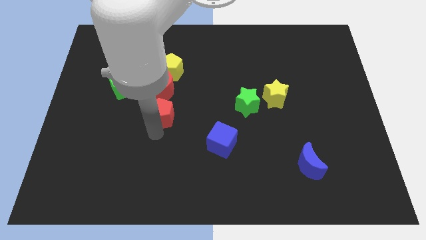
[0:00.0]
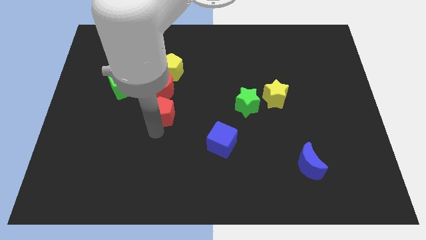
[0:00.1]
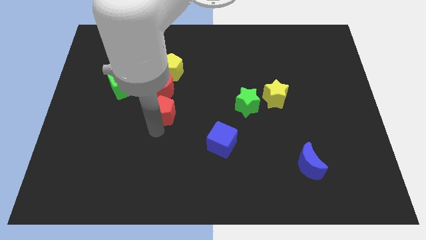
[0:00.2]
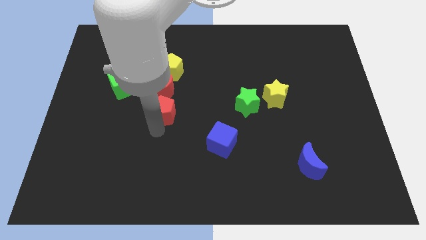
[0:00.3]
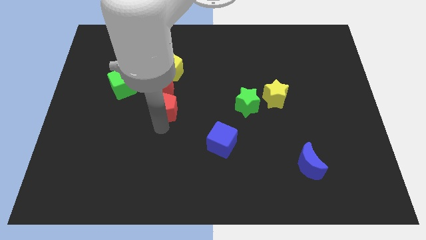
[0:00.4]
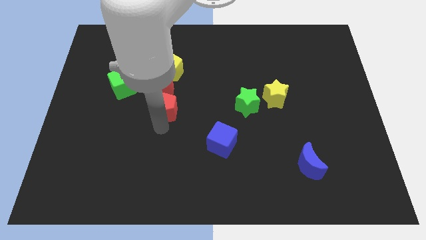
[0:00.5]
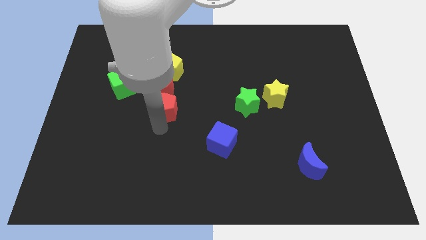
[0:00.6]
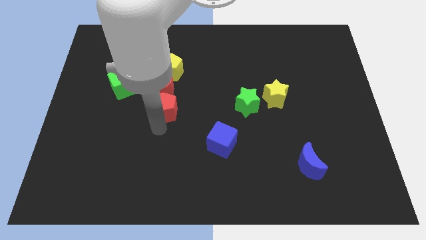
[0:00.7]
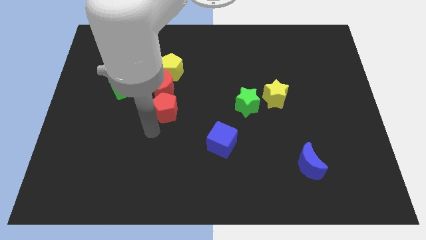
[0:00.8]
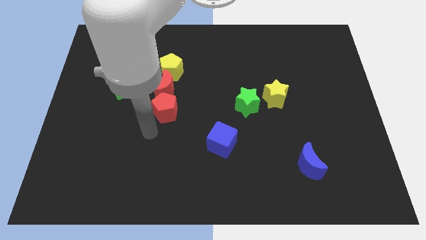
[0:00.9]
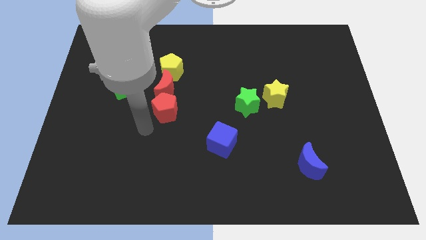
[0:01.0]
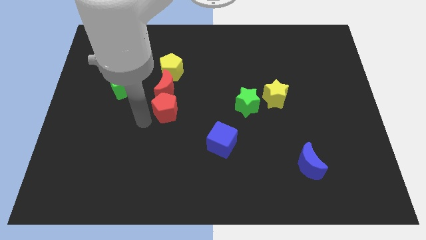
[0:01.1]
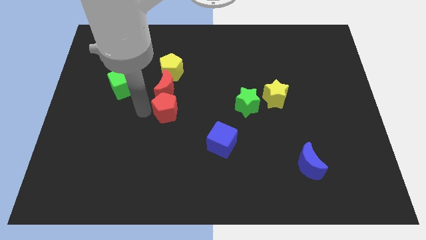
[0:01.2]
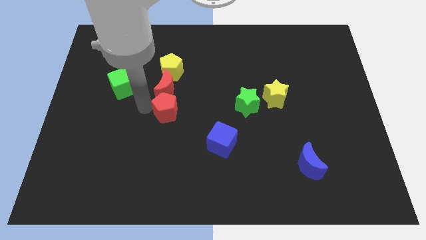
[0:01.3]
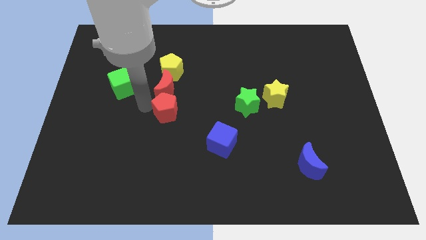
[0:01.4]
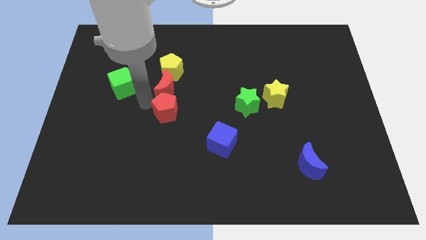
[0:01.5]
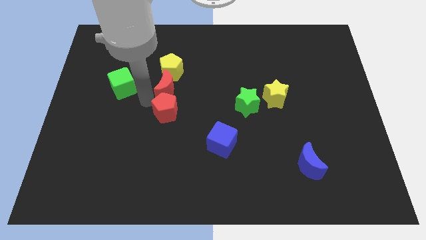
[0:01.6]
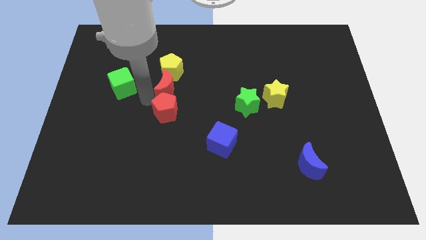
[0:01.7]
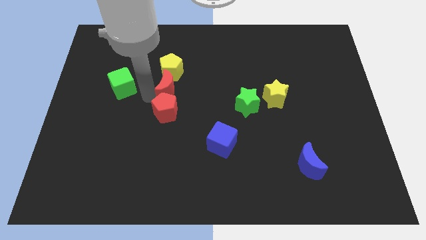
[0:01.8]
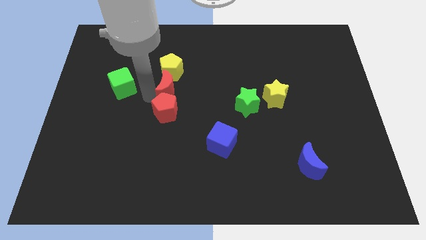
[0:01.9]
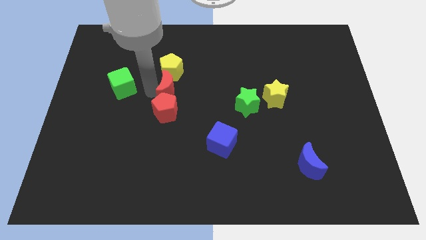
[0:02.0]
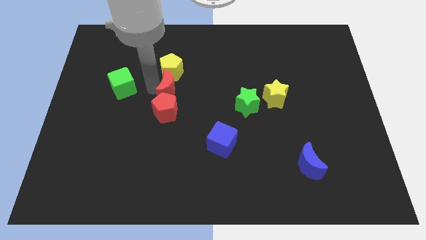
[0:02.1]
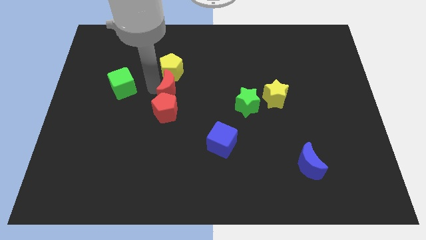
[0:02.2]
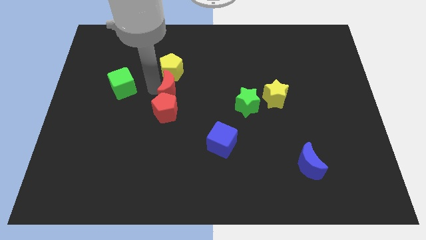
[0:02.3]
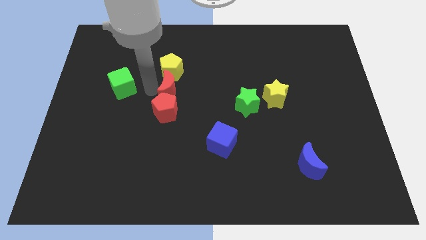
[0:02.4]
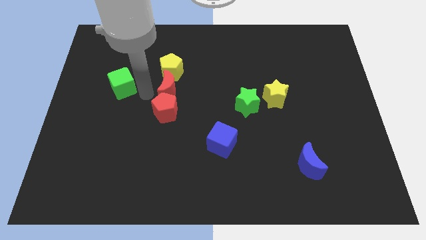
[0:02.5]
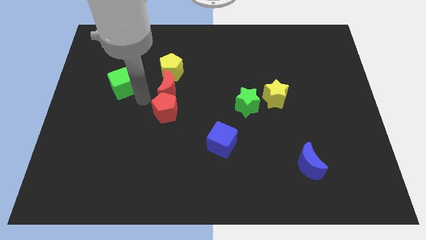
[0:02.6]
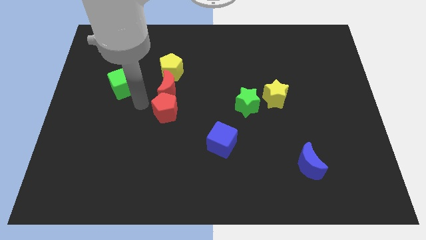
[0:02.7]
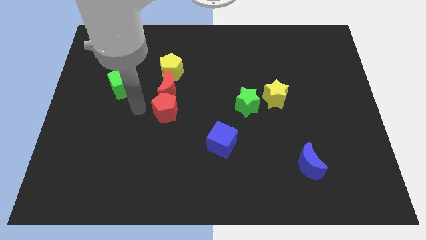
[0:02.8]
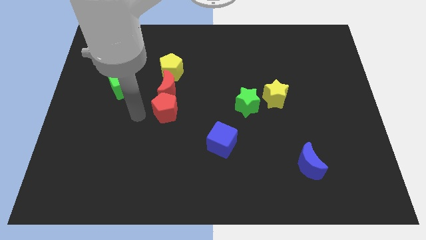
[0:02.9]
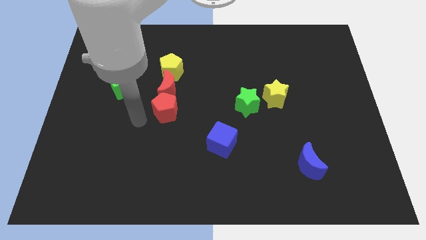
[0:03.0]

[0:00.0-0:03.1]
slightly move red moon near the red pentagon

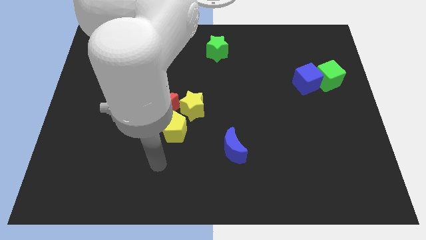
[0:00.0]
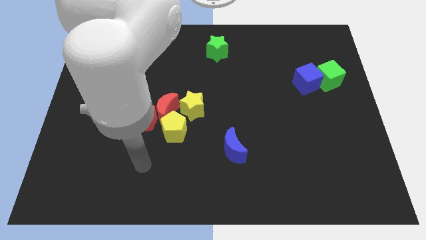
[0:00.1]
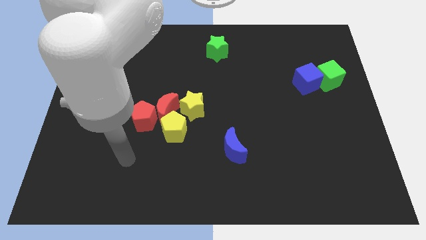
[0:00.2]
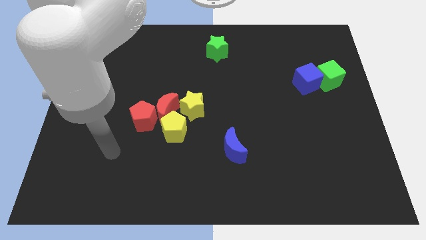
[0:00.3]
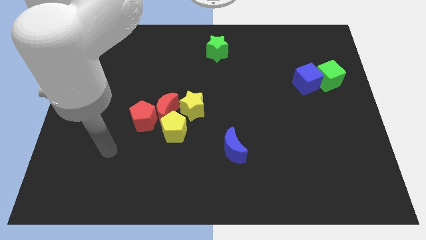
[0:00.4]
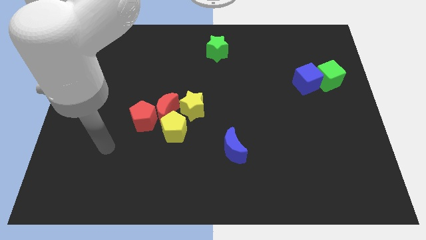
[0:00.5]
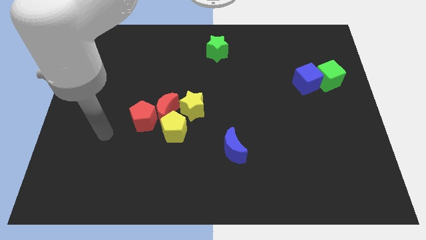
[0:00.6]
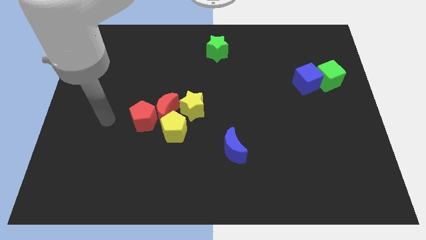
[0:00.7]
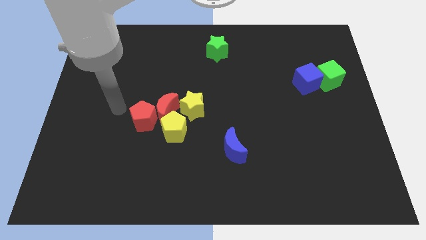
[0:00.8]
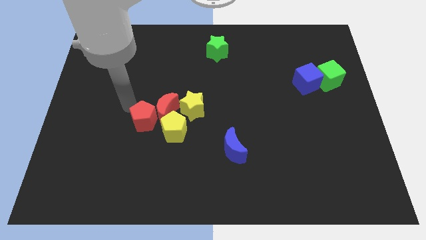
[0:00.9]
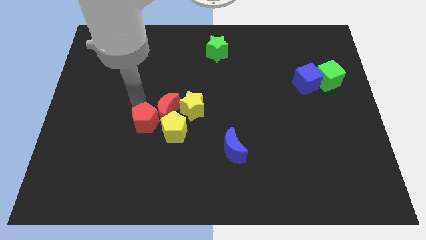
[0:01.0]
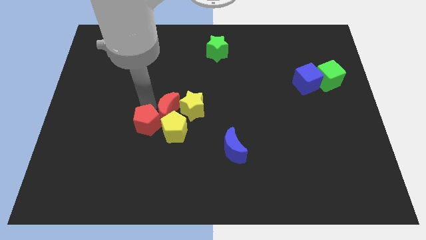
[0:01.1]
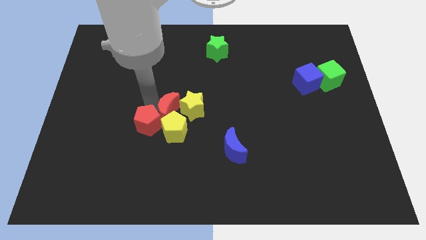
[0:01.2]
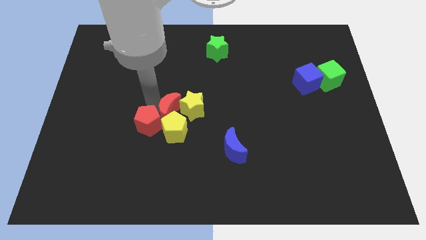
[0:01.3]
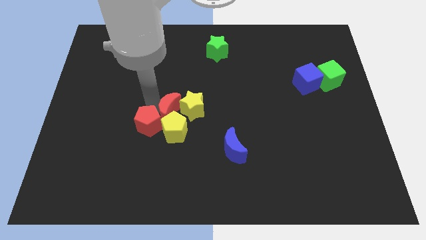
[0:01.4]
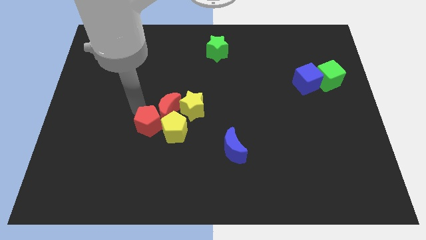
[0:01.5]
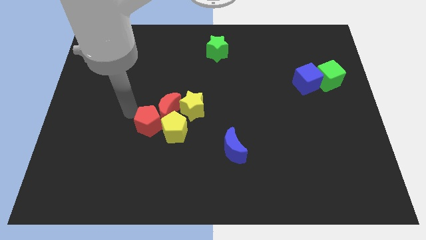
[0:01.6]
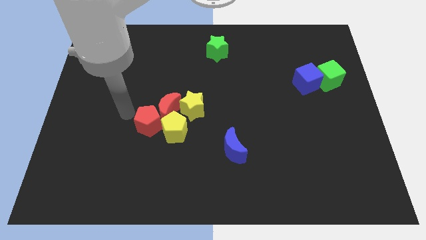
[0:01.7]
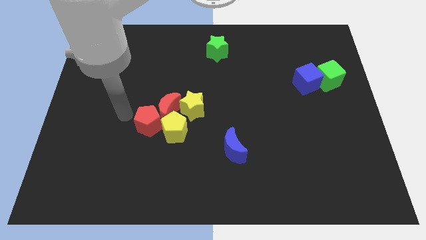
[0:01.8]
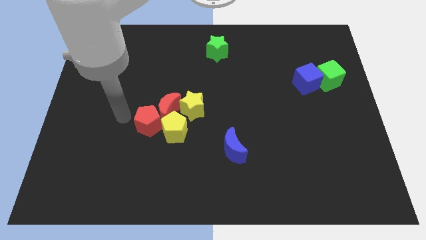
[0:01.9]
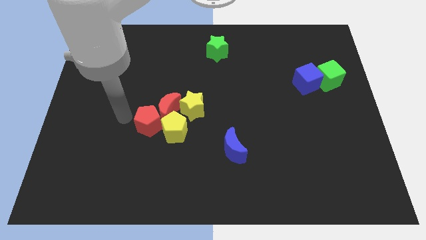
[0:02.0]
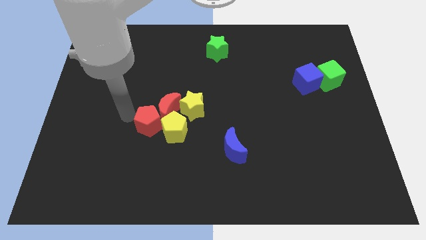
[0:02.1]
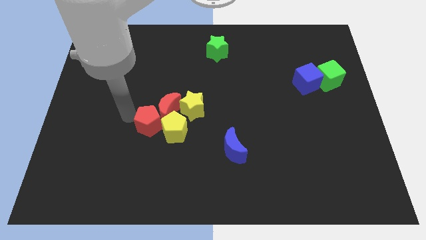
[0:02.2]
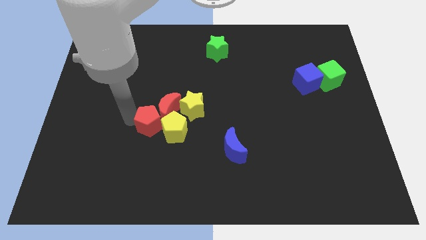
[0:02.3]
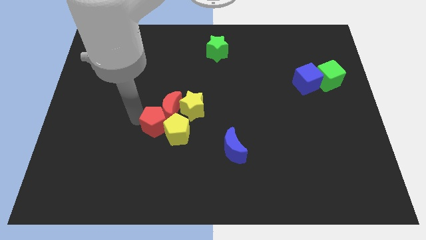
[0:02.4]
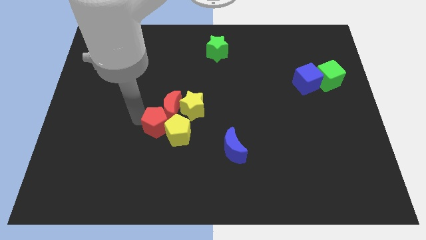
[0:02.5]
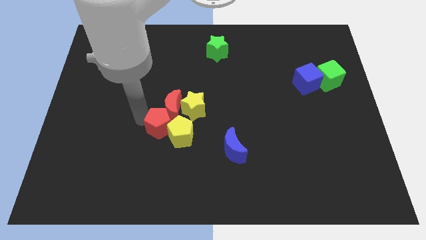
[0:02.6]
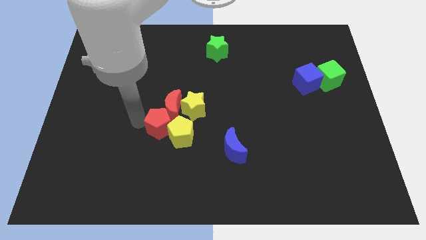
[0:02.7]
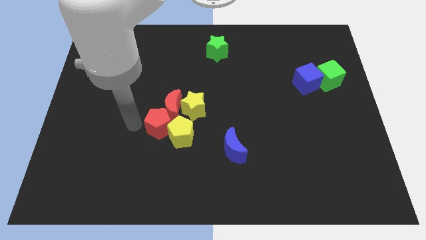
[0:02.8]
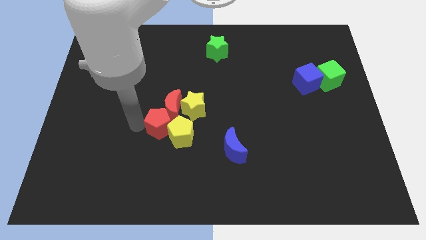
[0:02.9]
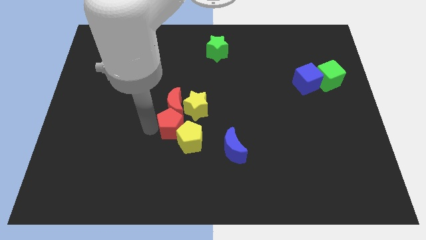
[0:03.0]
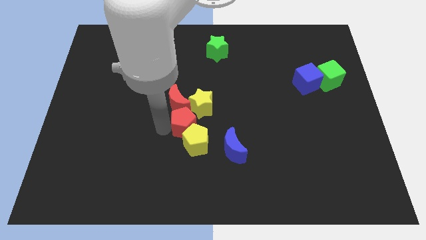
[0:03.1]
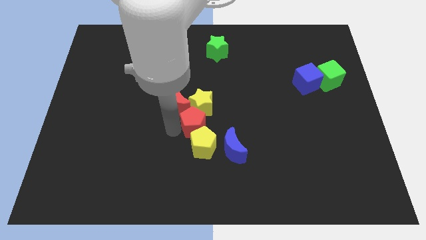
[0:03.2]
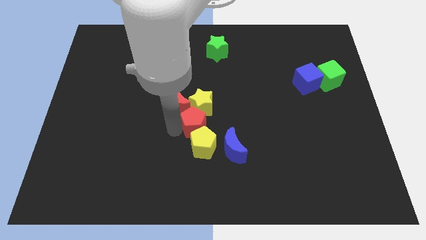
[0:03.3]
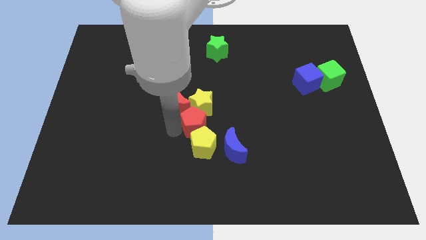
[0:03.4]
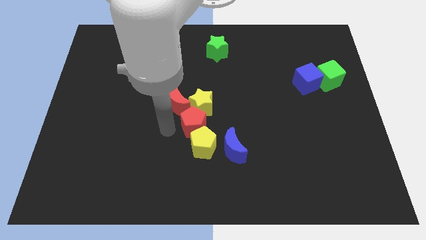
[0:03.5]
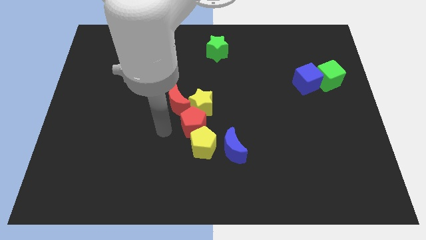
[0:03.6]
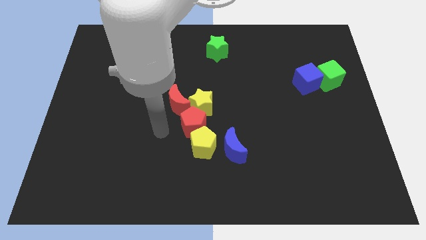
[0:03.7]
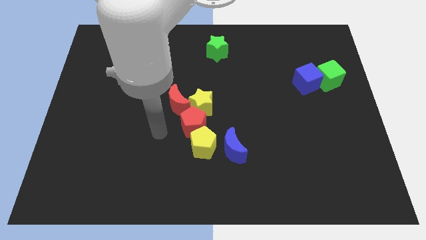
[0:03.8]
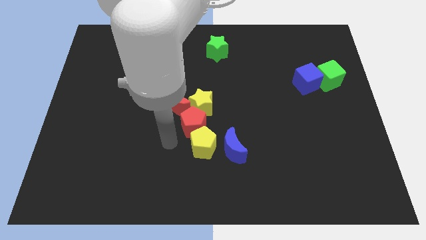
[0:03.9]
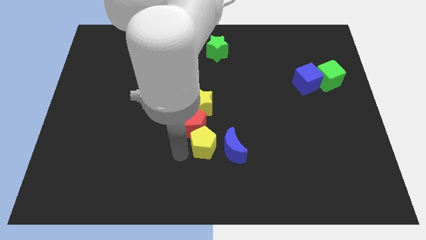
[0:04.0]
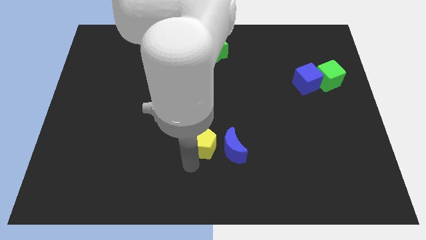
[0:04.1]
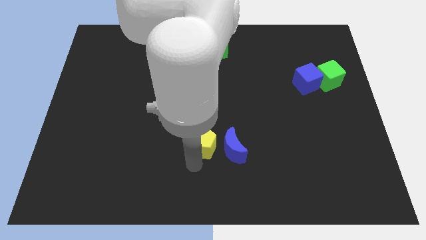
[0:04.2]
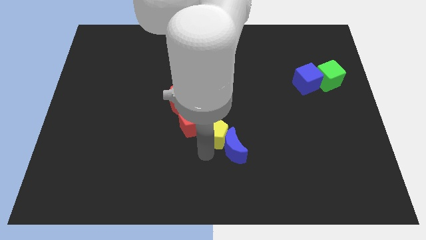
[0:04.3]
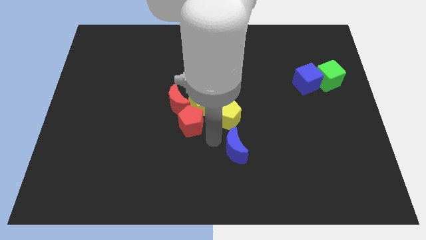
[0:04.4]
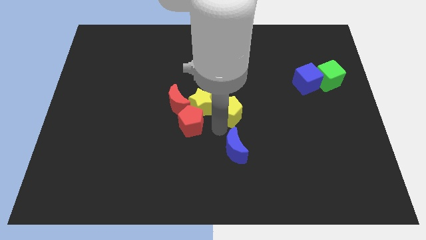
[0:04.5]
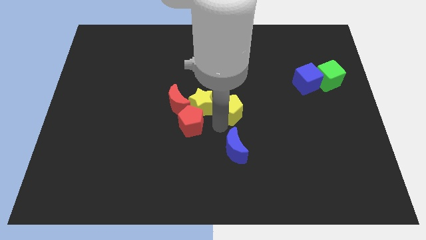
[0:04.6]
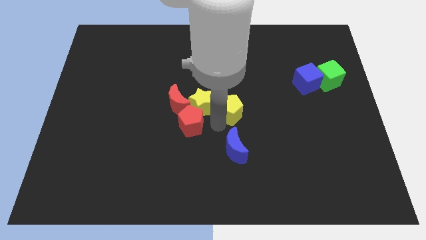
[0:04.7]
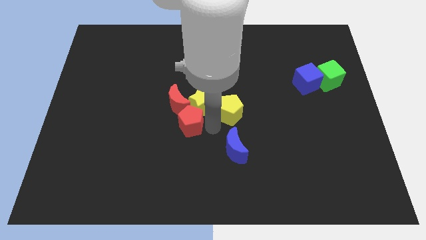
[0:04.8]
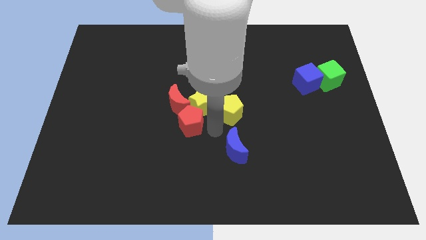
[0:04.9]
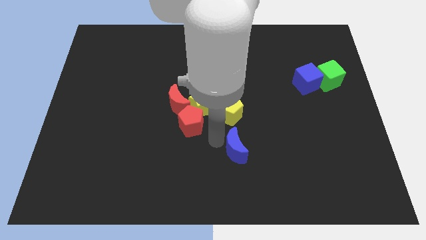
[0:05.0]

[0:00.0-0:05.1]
adjust the red and yellow blocks at the center of the board

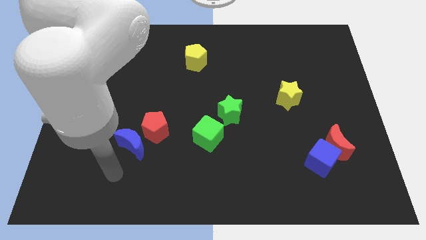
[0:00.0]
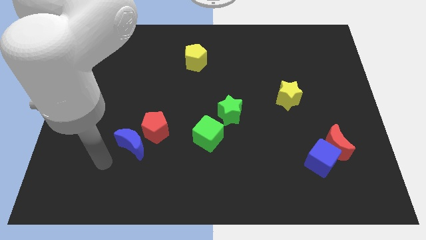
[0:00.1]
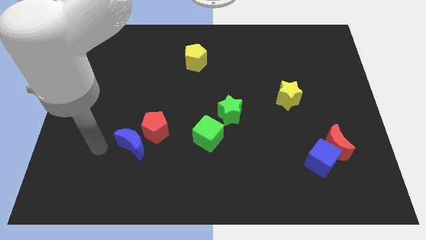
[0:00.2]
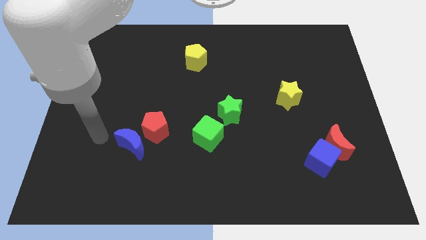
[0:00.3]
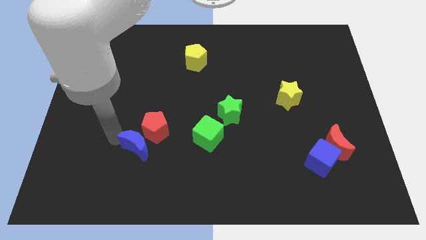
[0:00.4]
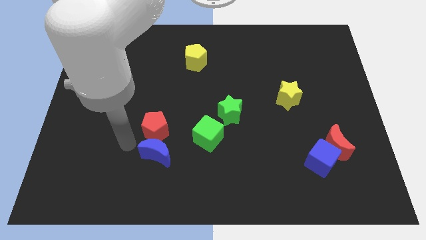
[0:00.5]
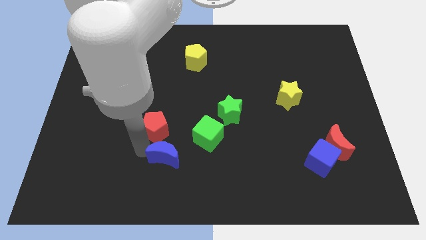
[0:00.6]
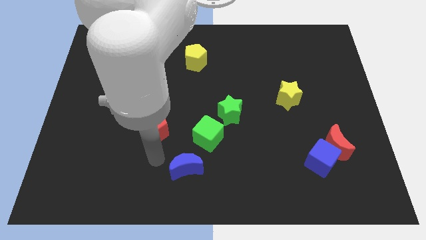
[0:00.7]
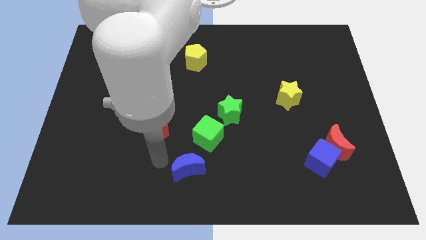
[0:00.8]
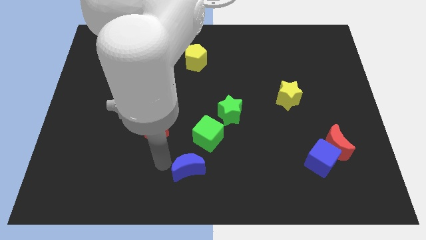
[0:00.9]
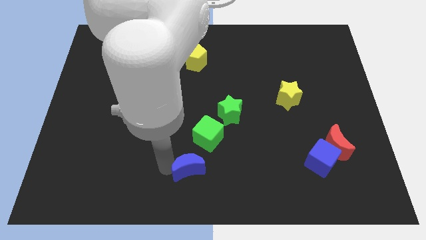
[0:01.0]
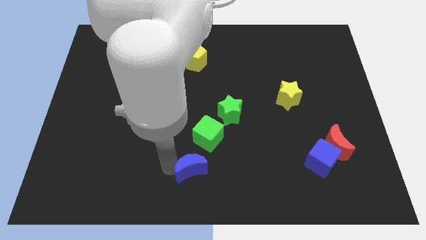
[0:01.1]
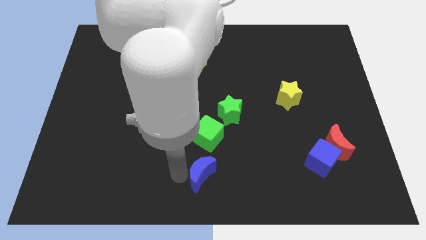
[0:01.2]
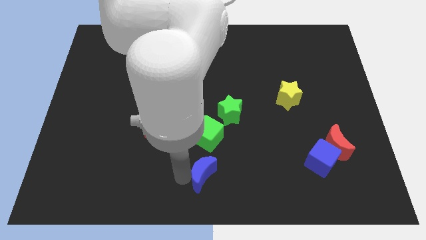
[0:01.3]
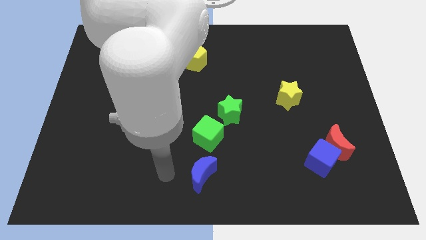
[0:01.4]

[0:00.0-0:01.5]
move the blue crescent below the green cube
